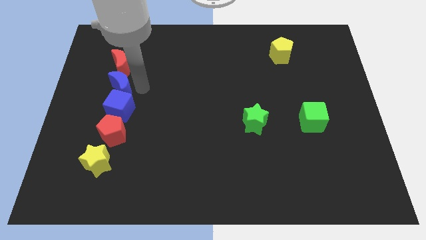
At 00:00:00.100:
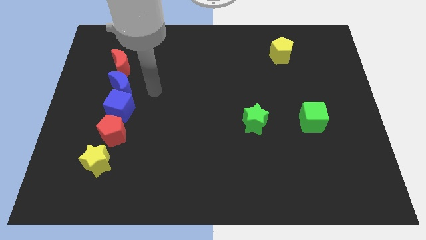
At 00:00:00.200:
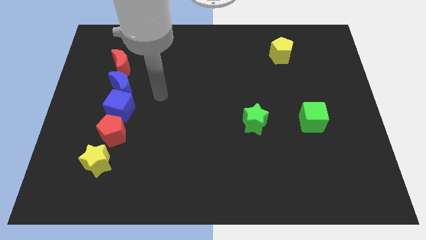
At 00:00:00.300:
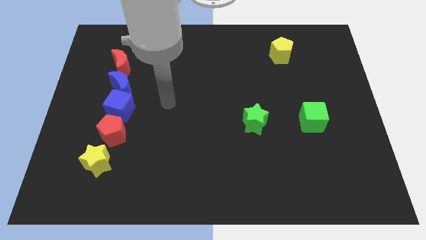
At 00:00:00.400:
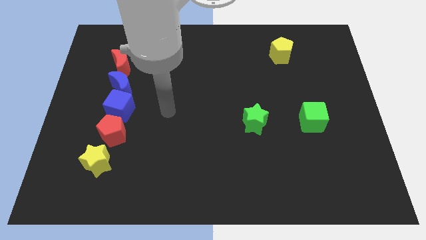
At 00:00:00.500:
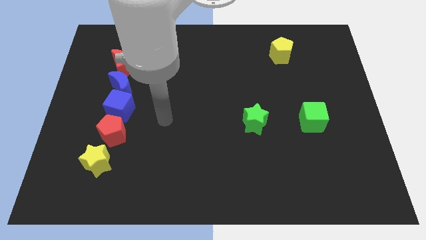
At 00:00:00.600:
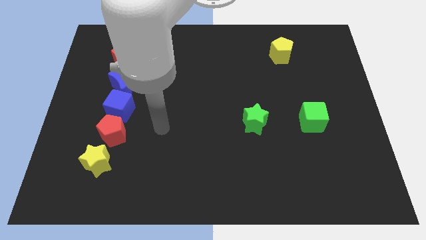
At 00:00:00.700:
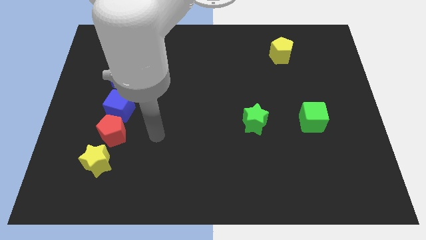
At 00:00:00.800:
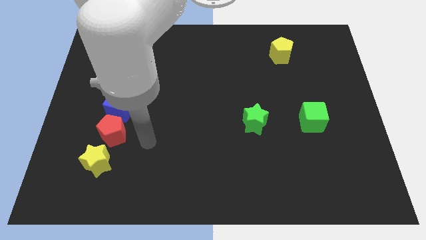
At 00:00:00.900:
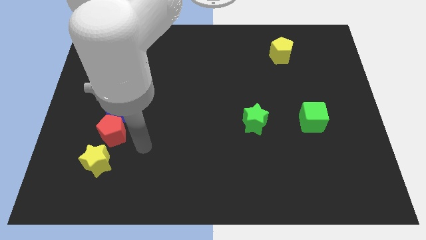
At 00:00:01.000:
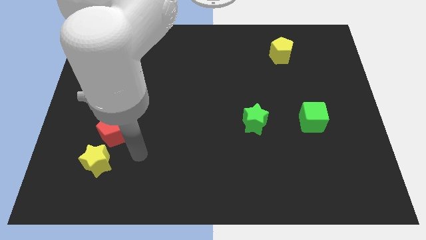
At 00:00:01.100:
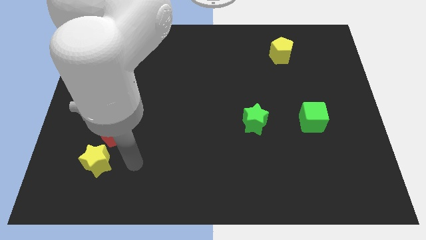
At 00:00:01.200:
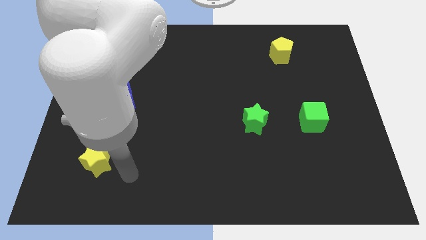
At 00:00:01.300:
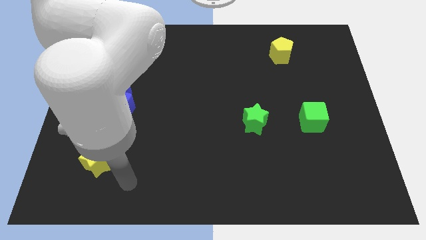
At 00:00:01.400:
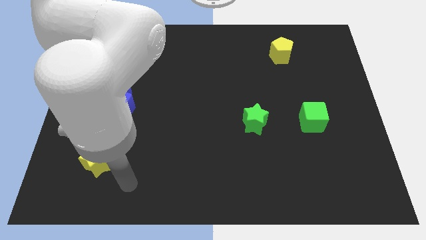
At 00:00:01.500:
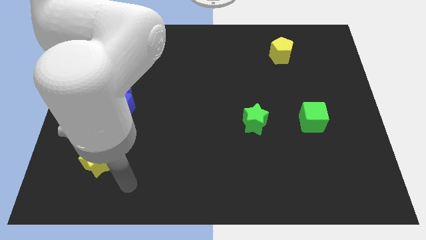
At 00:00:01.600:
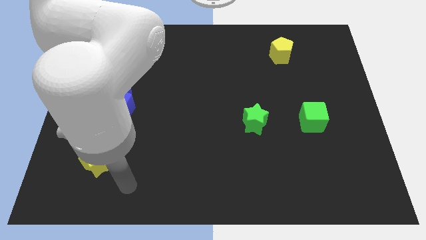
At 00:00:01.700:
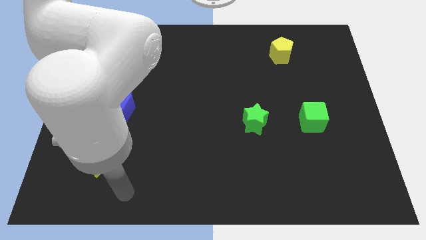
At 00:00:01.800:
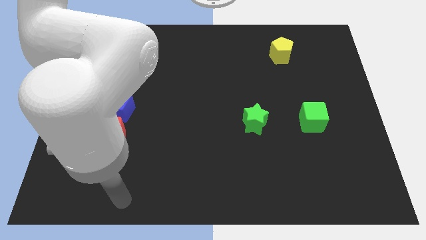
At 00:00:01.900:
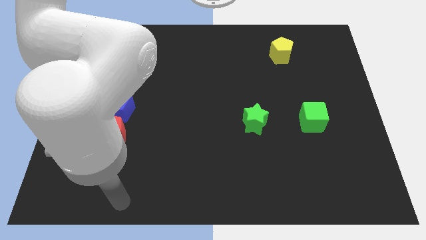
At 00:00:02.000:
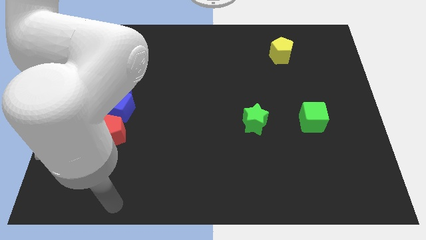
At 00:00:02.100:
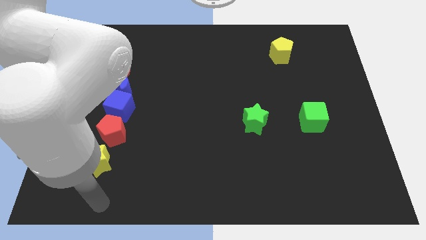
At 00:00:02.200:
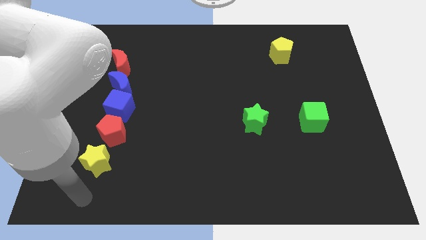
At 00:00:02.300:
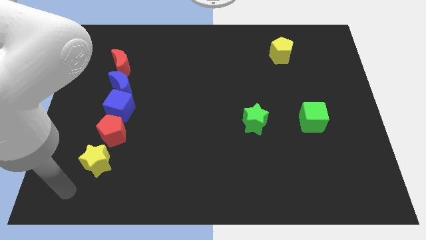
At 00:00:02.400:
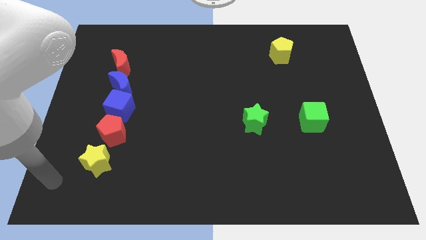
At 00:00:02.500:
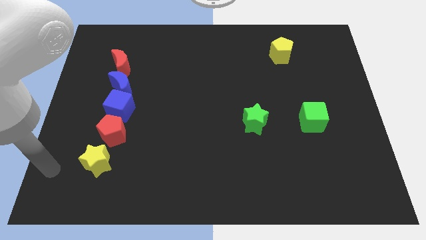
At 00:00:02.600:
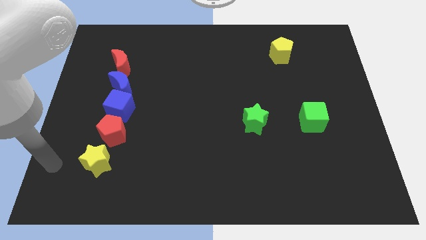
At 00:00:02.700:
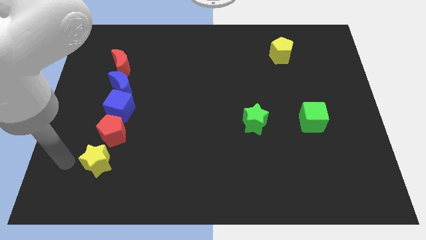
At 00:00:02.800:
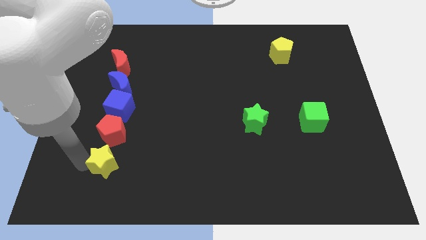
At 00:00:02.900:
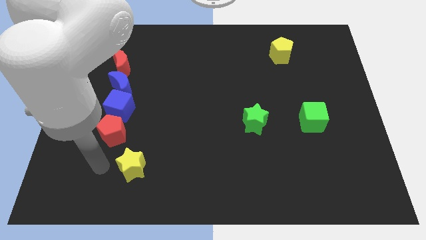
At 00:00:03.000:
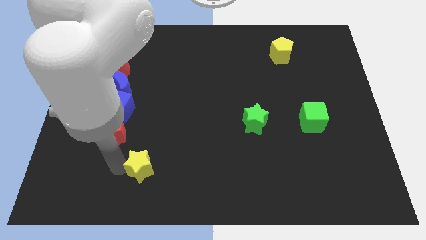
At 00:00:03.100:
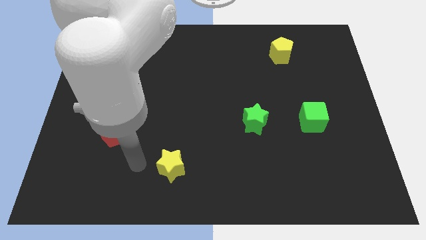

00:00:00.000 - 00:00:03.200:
move your arm to the left of the yellow star

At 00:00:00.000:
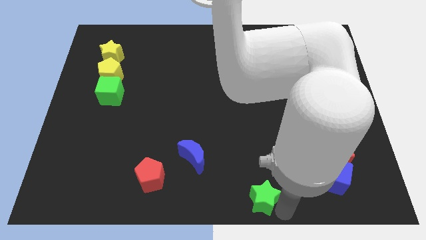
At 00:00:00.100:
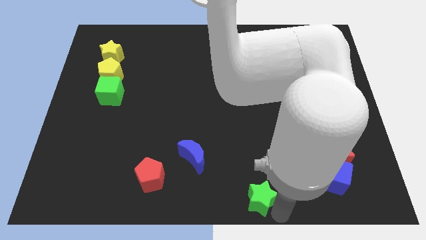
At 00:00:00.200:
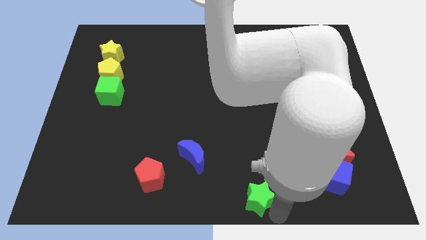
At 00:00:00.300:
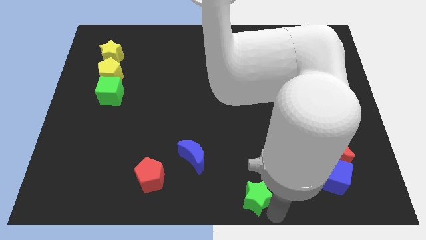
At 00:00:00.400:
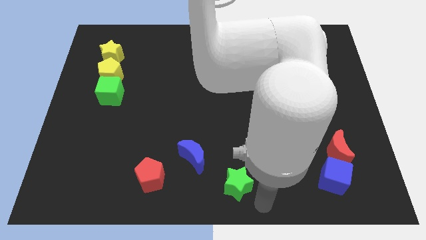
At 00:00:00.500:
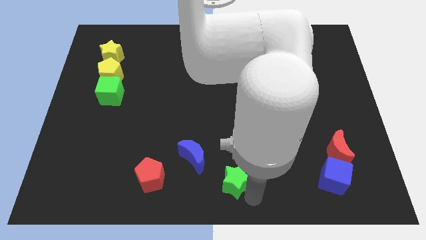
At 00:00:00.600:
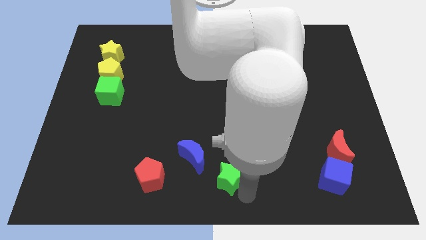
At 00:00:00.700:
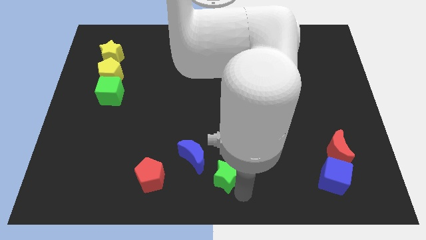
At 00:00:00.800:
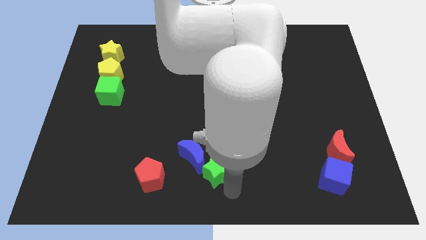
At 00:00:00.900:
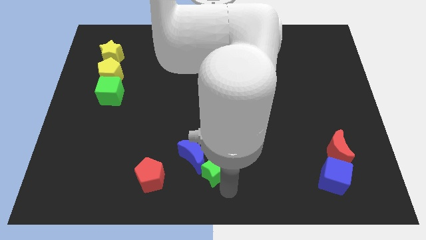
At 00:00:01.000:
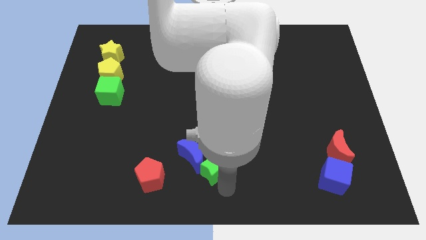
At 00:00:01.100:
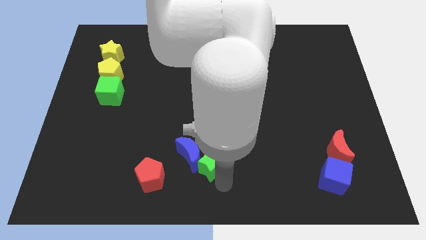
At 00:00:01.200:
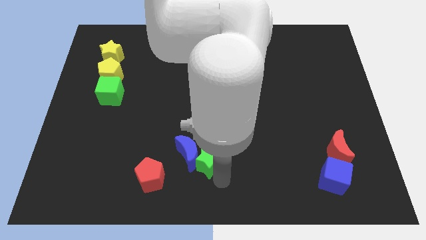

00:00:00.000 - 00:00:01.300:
push the green star to the right of the blue crescent

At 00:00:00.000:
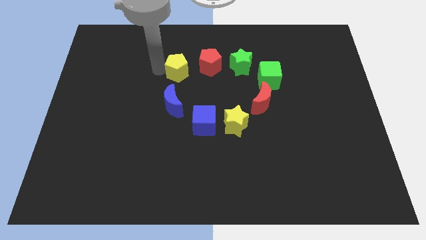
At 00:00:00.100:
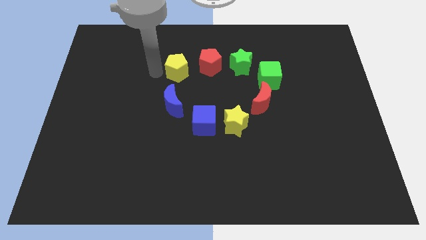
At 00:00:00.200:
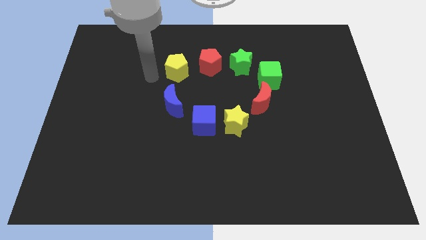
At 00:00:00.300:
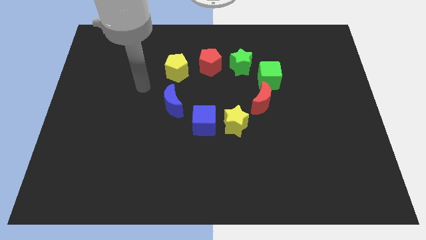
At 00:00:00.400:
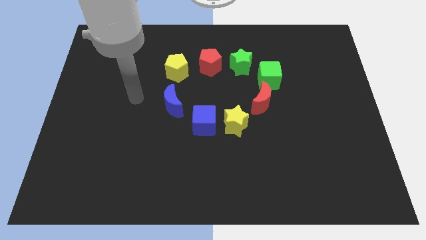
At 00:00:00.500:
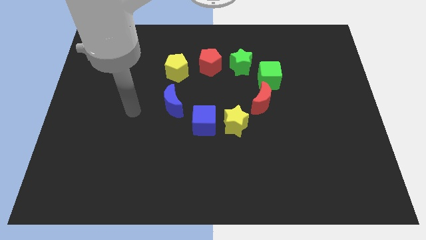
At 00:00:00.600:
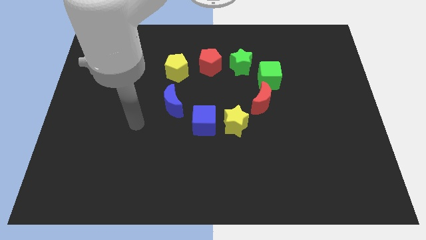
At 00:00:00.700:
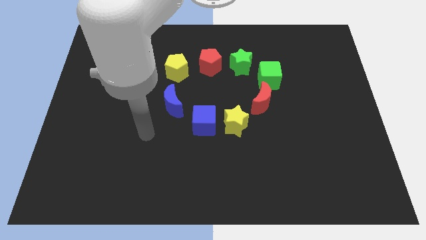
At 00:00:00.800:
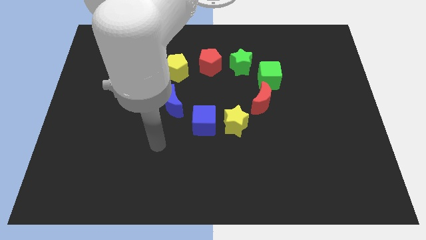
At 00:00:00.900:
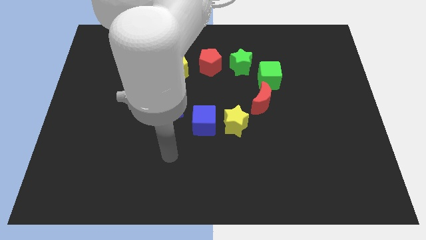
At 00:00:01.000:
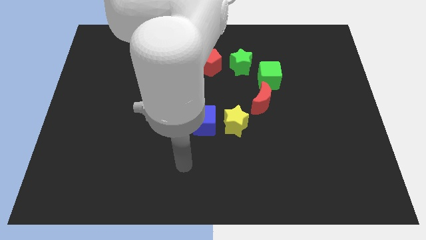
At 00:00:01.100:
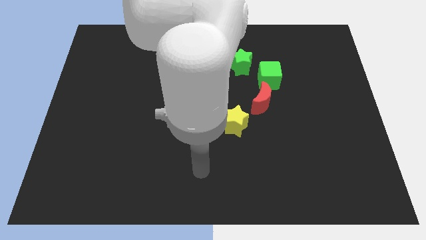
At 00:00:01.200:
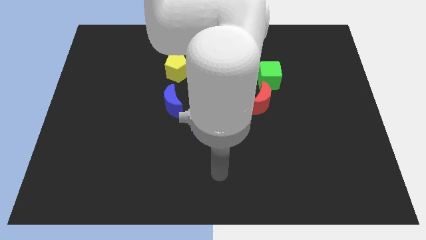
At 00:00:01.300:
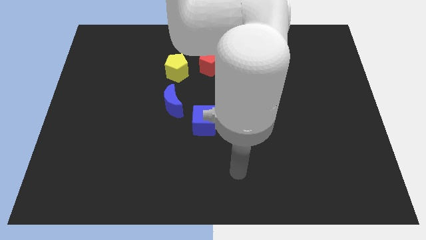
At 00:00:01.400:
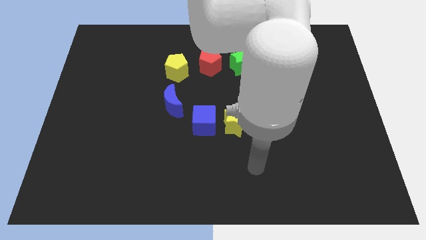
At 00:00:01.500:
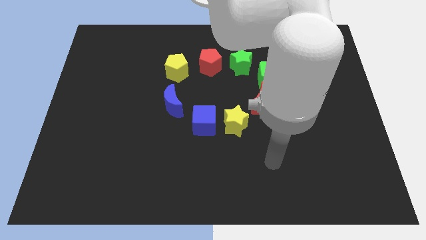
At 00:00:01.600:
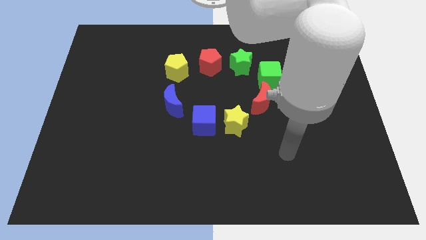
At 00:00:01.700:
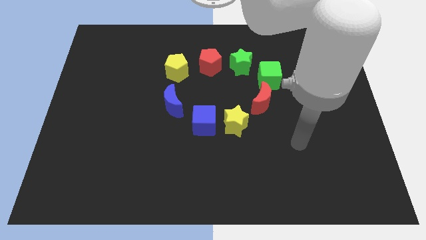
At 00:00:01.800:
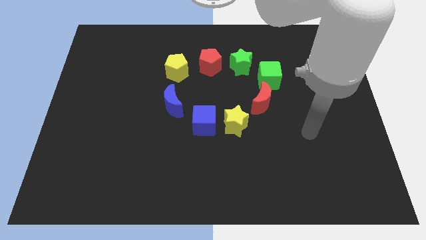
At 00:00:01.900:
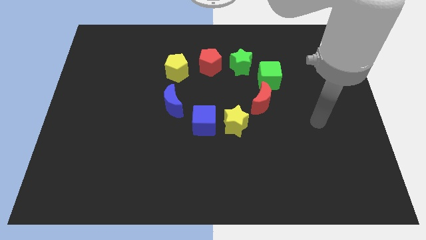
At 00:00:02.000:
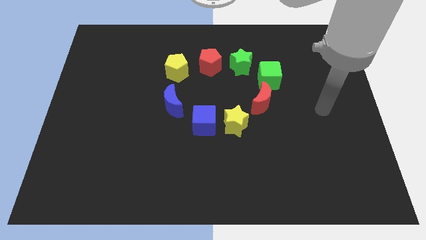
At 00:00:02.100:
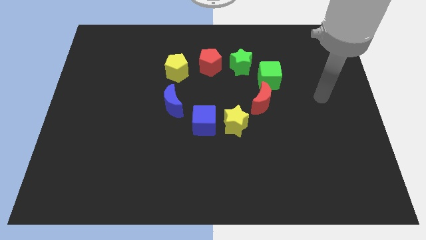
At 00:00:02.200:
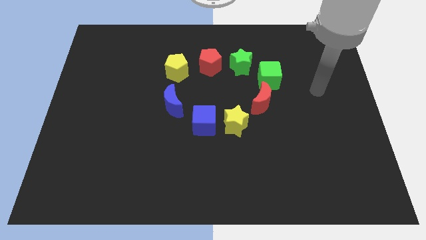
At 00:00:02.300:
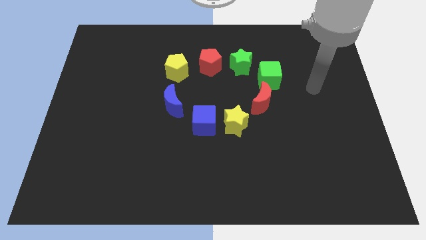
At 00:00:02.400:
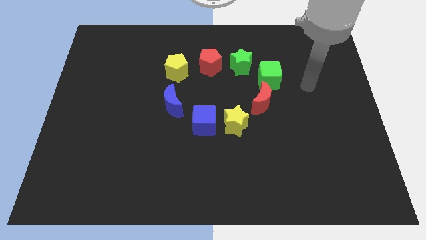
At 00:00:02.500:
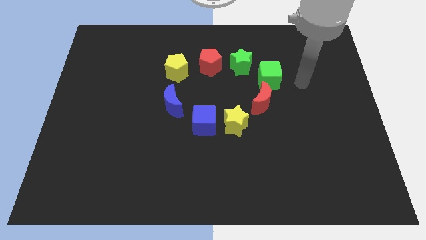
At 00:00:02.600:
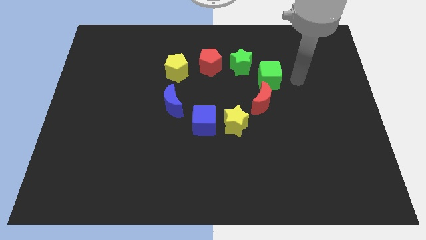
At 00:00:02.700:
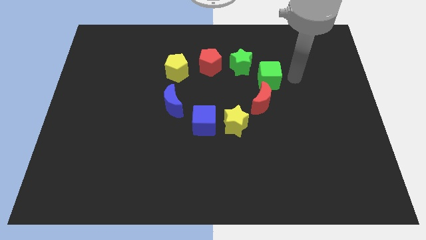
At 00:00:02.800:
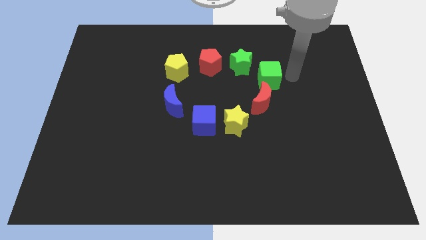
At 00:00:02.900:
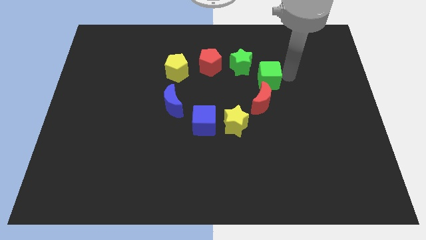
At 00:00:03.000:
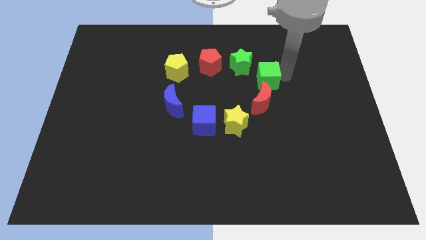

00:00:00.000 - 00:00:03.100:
point your arm close to green cube

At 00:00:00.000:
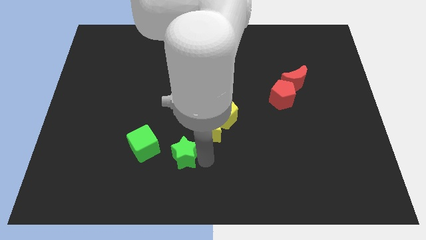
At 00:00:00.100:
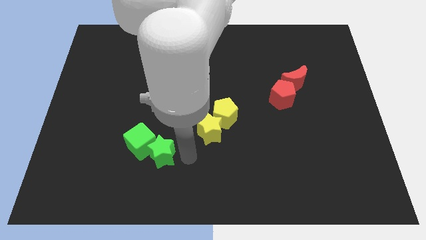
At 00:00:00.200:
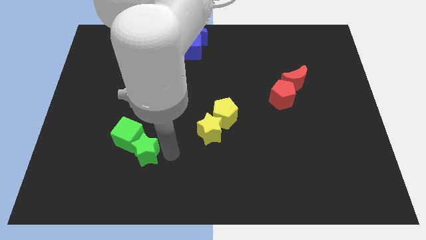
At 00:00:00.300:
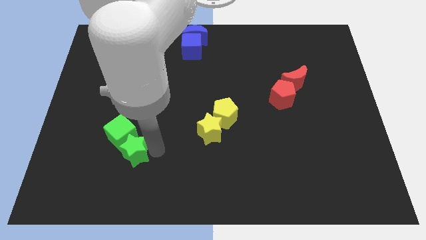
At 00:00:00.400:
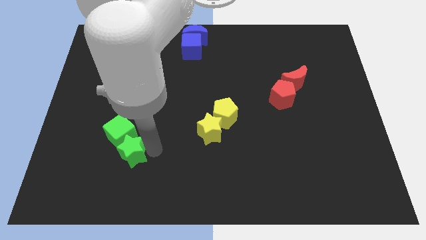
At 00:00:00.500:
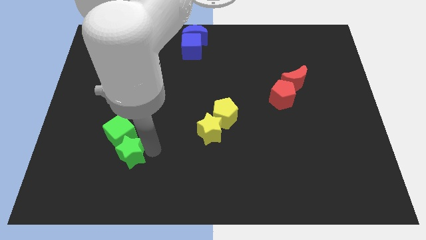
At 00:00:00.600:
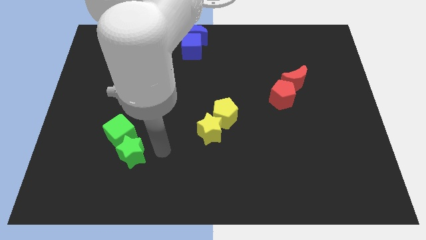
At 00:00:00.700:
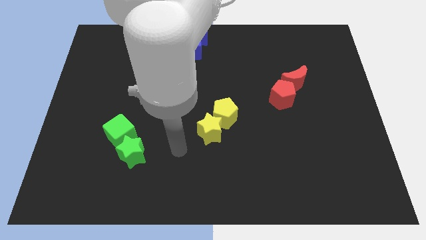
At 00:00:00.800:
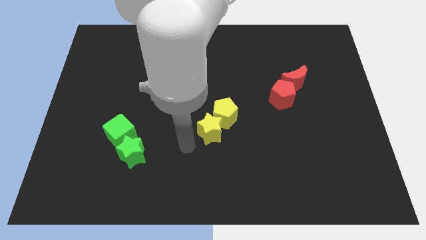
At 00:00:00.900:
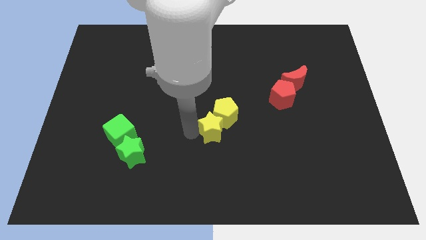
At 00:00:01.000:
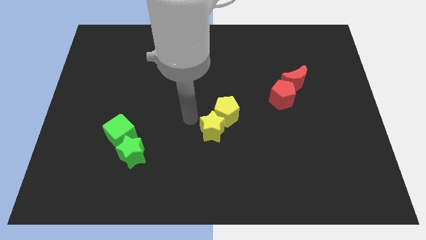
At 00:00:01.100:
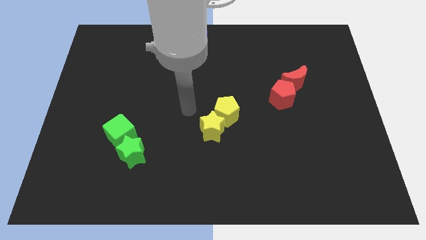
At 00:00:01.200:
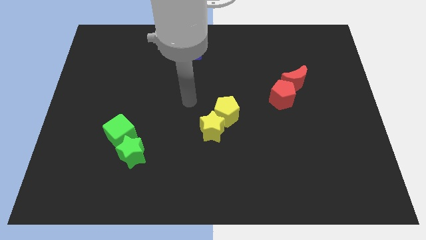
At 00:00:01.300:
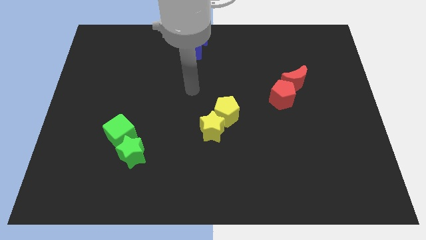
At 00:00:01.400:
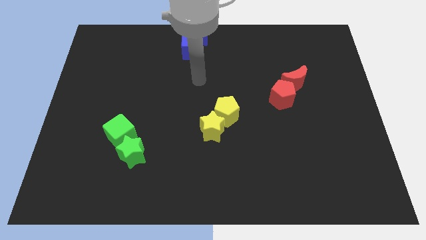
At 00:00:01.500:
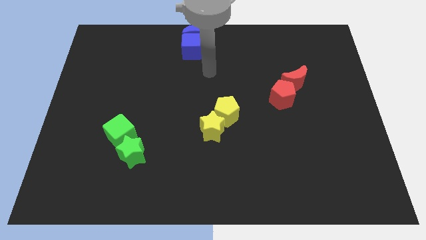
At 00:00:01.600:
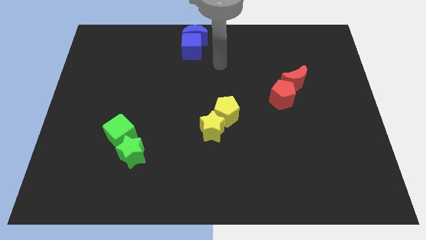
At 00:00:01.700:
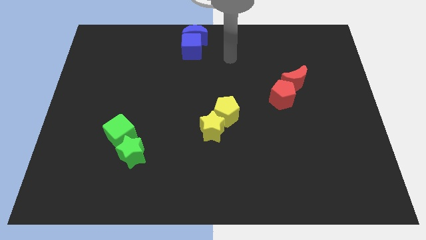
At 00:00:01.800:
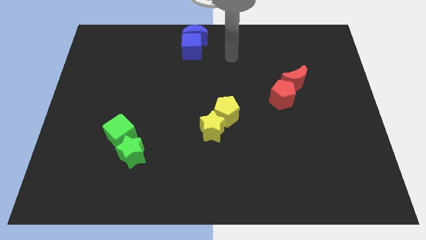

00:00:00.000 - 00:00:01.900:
push the green cube with green star
